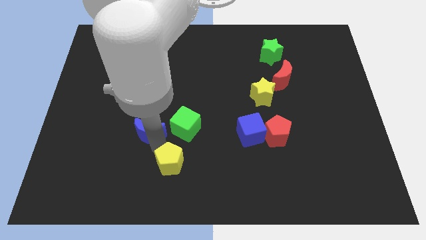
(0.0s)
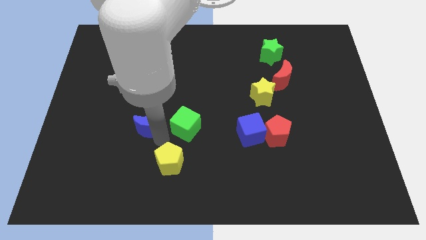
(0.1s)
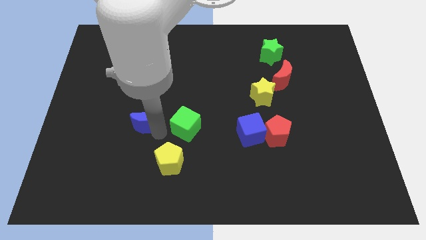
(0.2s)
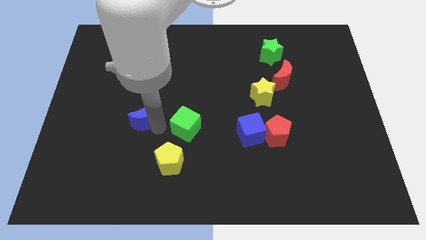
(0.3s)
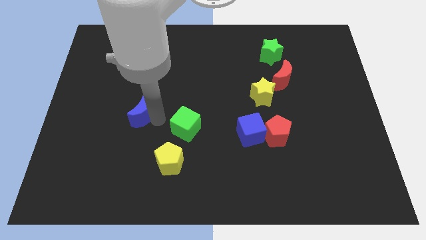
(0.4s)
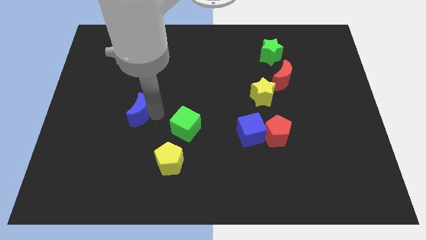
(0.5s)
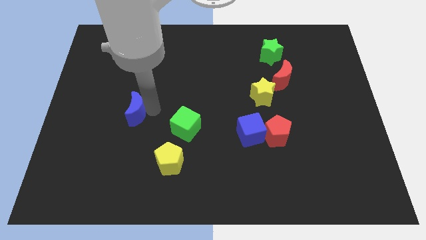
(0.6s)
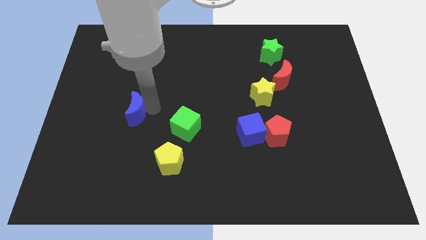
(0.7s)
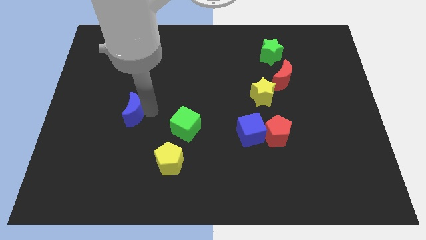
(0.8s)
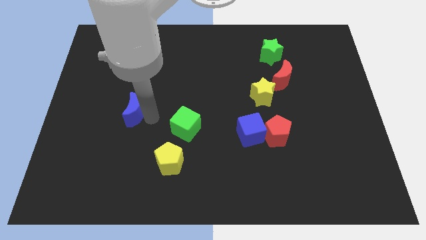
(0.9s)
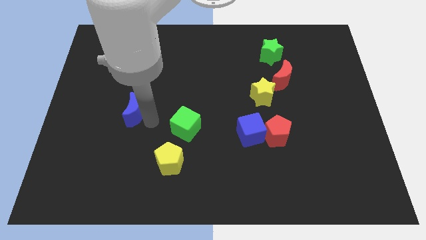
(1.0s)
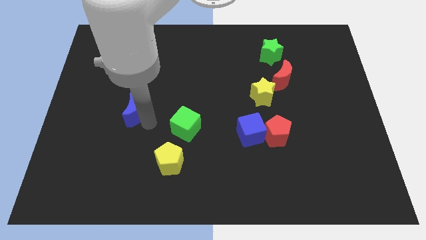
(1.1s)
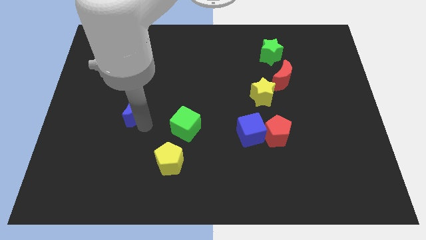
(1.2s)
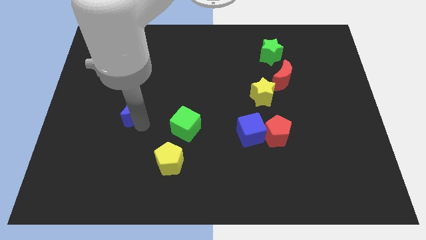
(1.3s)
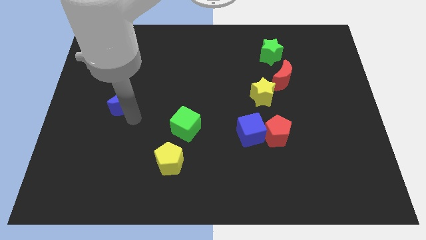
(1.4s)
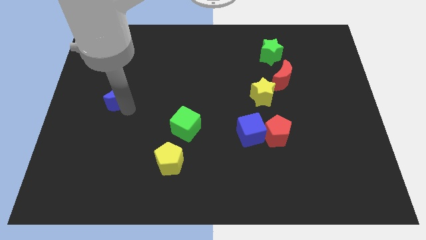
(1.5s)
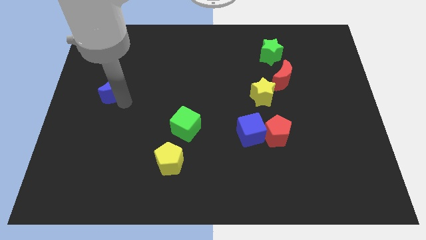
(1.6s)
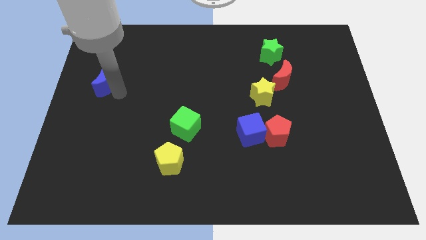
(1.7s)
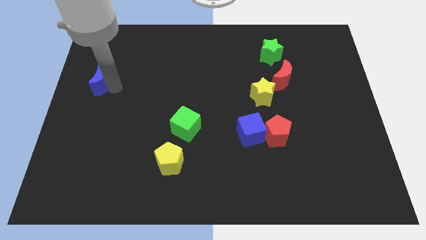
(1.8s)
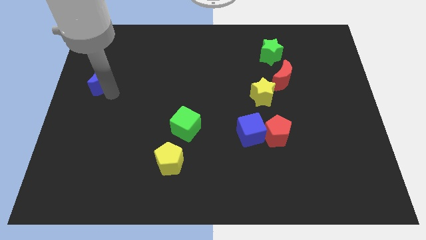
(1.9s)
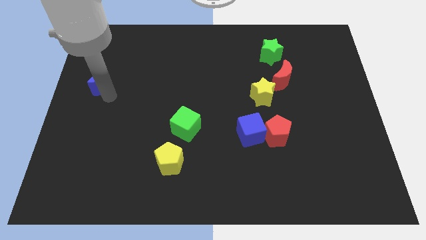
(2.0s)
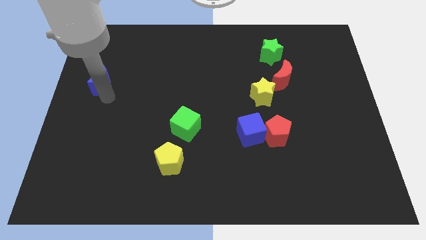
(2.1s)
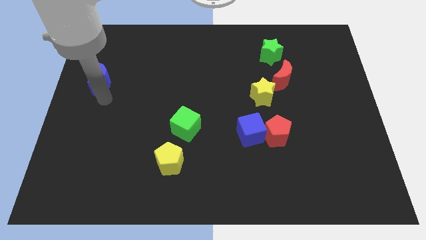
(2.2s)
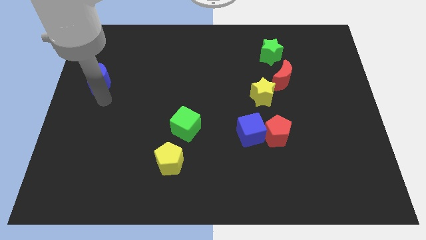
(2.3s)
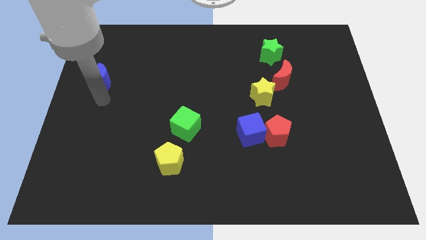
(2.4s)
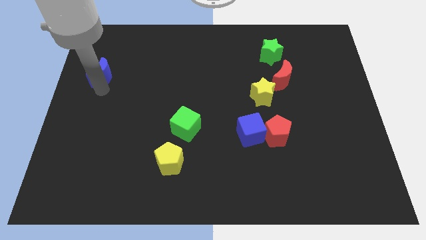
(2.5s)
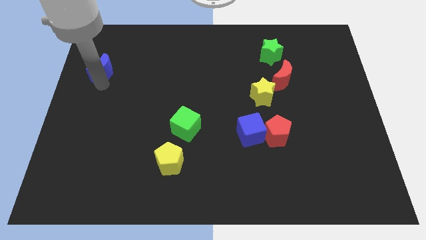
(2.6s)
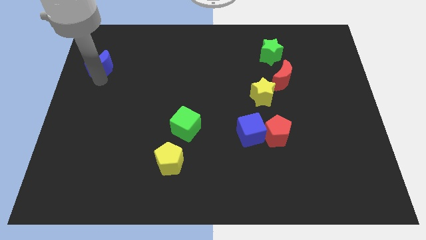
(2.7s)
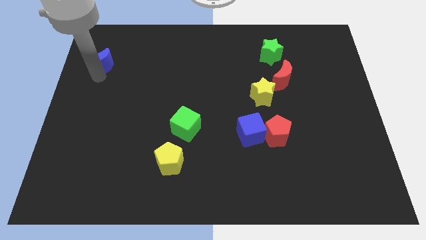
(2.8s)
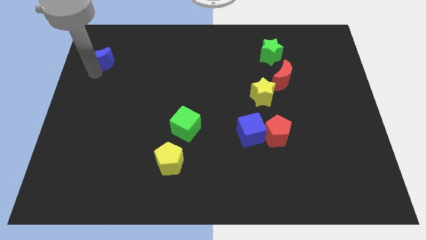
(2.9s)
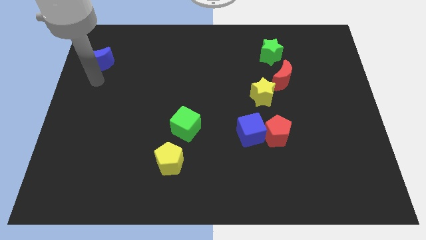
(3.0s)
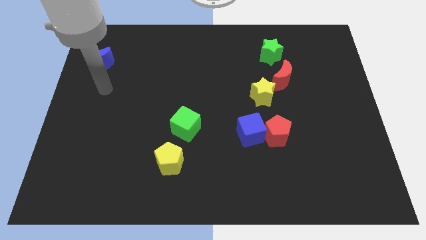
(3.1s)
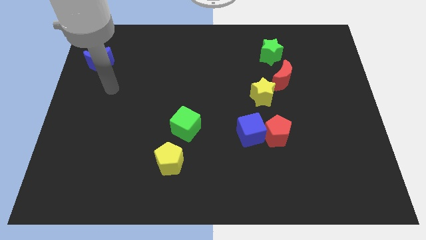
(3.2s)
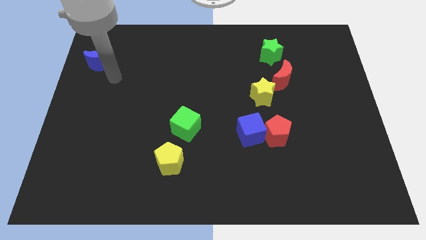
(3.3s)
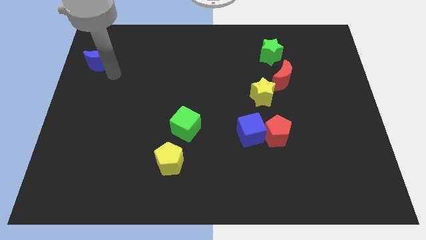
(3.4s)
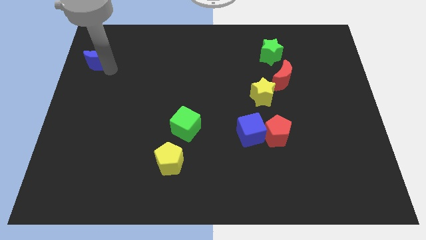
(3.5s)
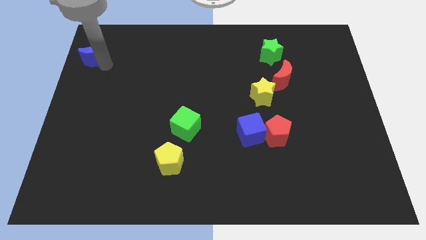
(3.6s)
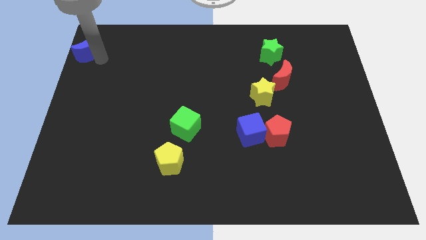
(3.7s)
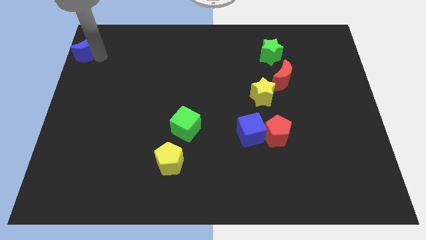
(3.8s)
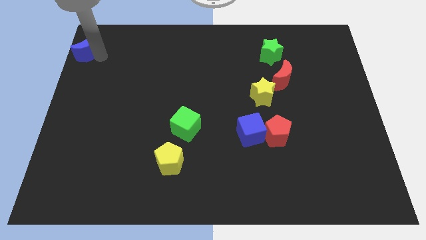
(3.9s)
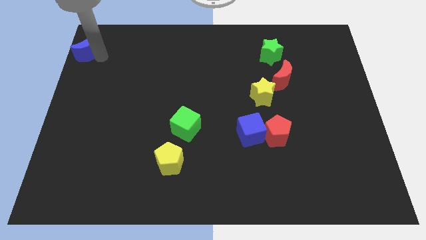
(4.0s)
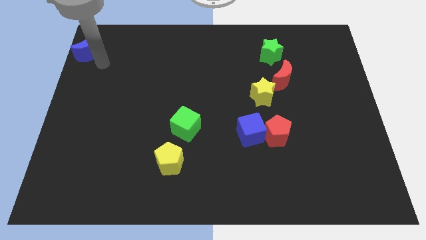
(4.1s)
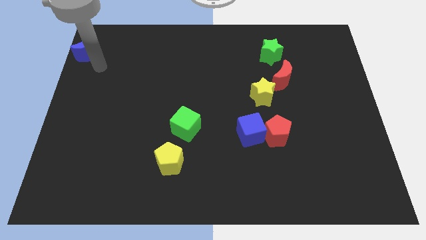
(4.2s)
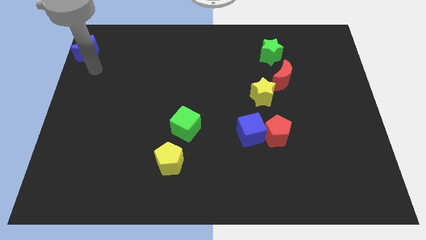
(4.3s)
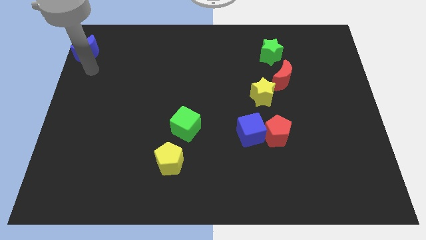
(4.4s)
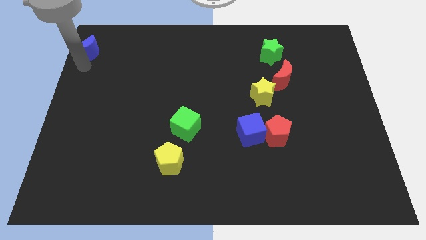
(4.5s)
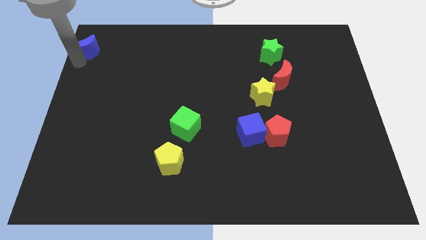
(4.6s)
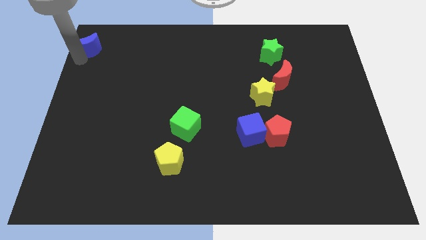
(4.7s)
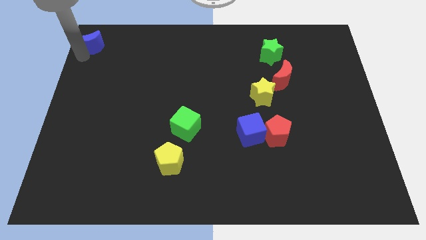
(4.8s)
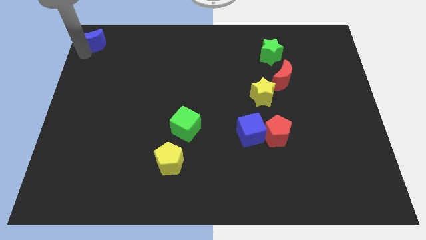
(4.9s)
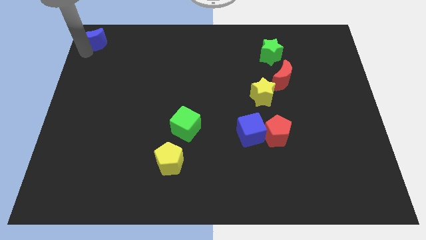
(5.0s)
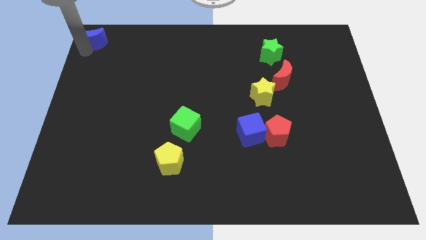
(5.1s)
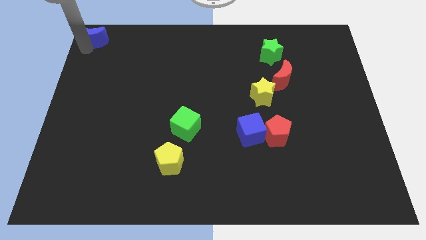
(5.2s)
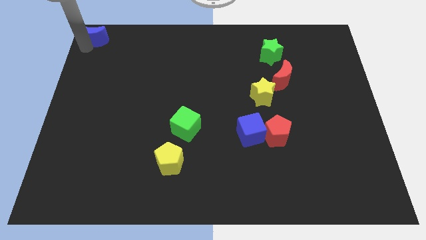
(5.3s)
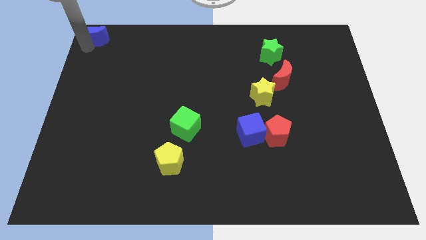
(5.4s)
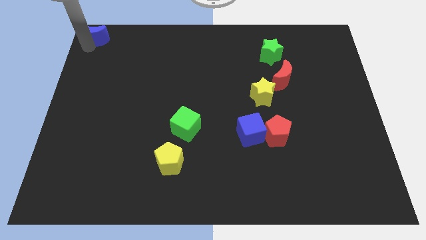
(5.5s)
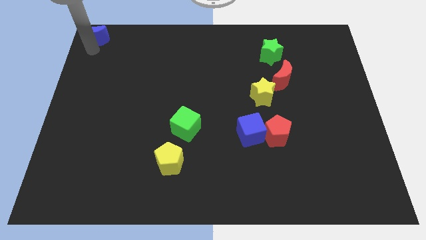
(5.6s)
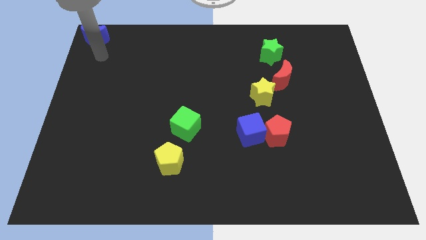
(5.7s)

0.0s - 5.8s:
push the blue crescent to the top left corner of the board

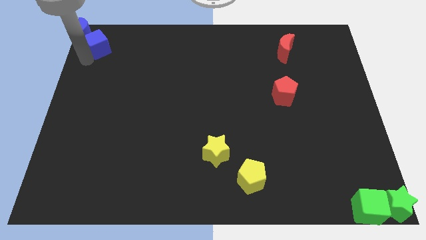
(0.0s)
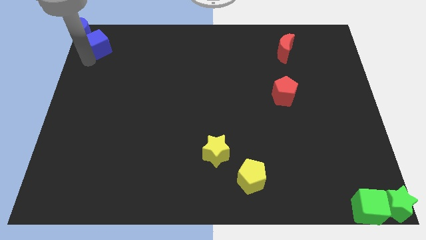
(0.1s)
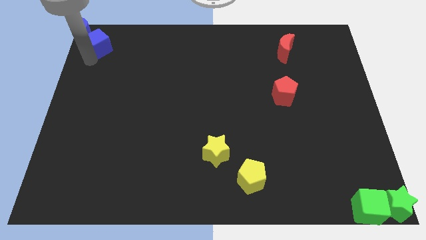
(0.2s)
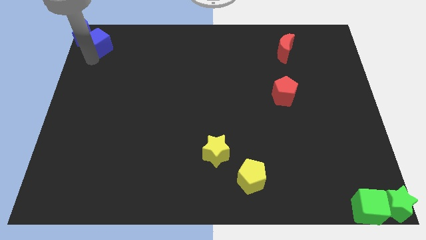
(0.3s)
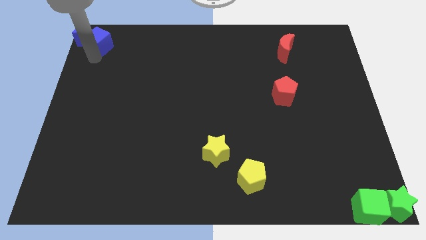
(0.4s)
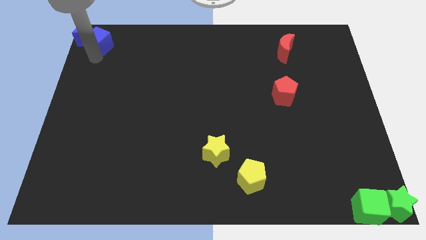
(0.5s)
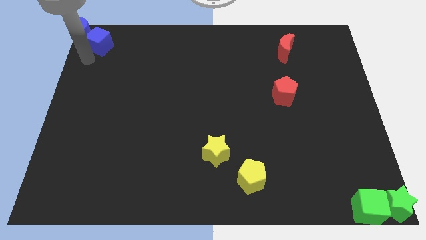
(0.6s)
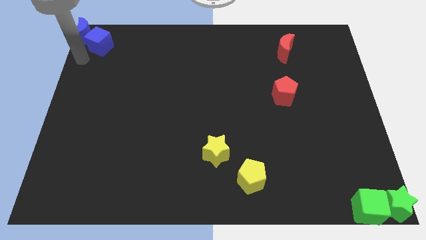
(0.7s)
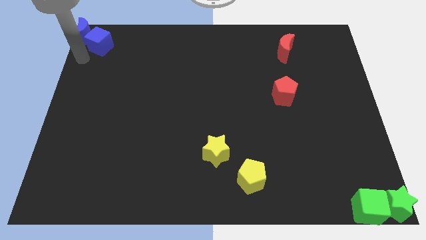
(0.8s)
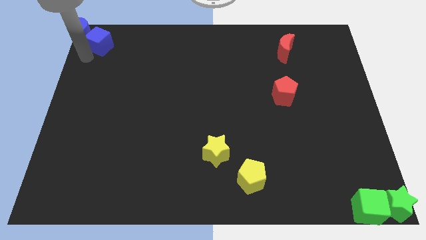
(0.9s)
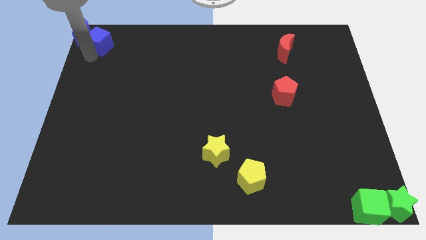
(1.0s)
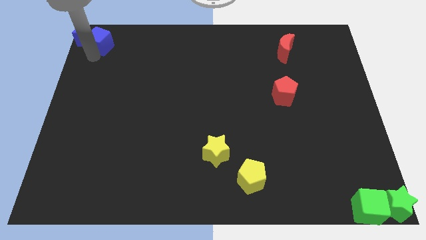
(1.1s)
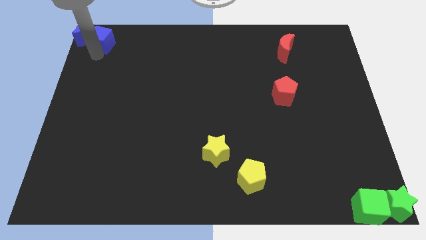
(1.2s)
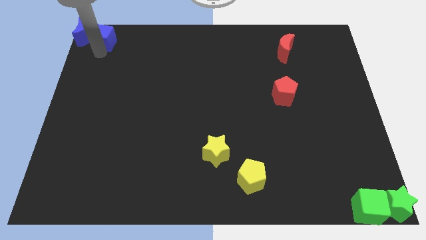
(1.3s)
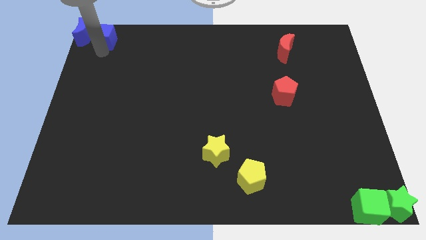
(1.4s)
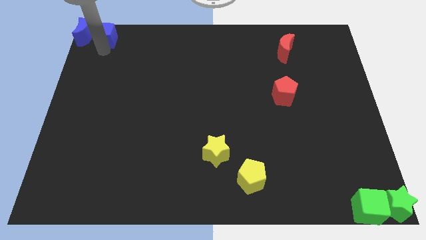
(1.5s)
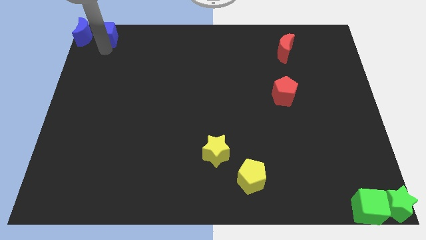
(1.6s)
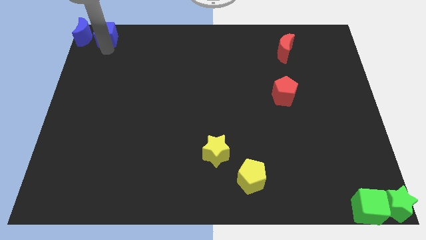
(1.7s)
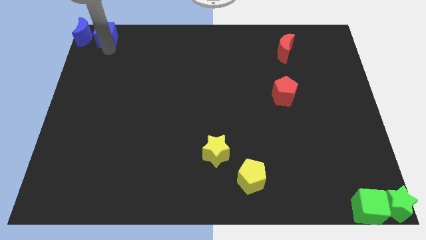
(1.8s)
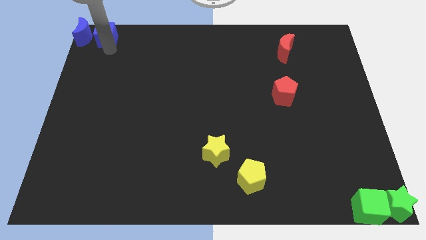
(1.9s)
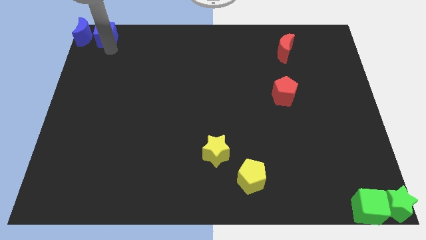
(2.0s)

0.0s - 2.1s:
place blue cube to the right of blue moon

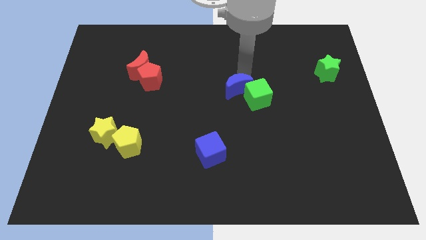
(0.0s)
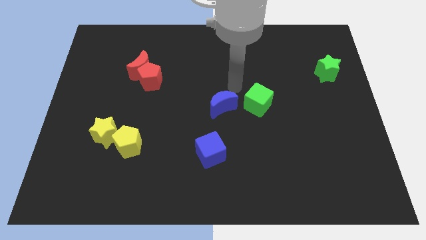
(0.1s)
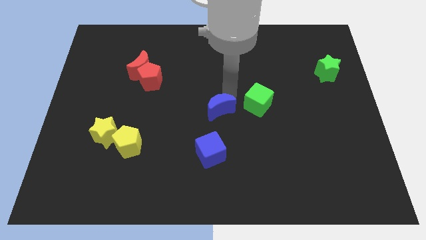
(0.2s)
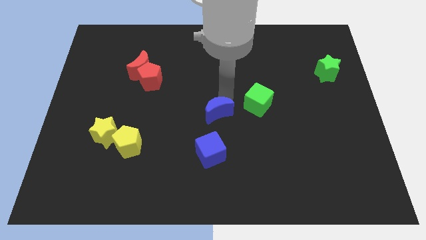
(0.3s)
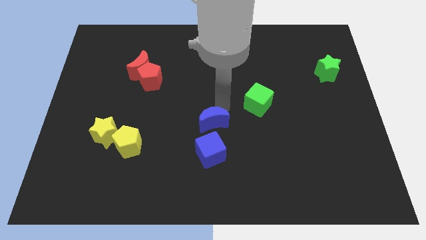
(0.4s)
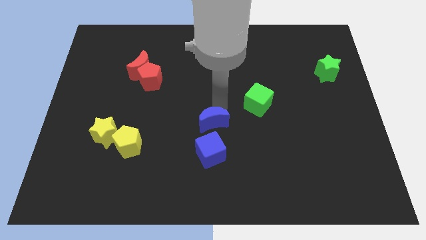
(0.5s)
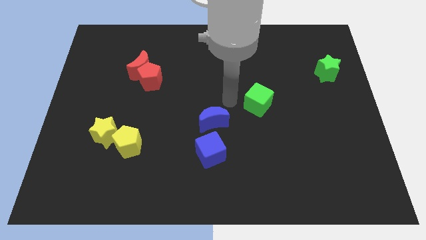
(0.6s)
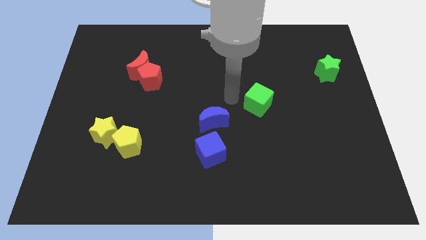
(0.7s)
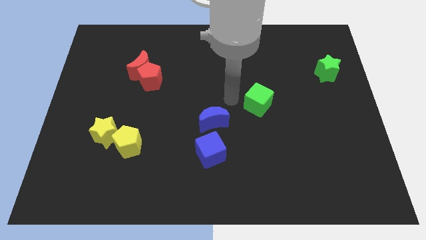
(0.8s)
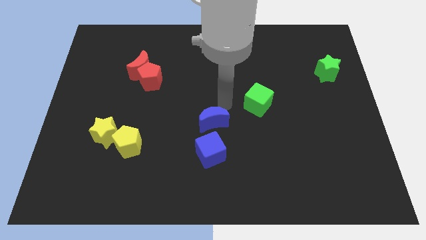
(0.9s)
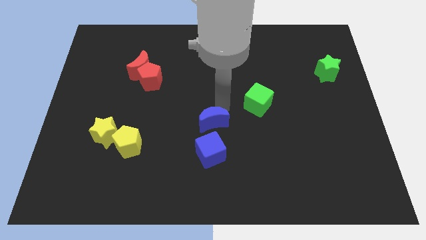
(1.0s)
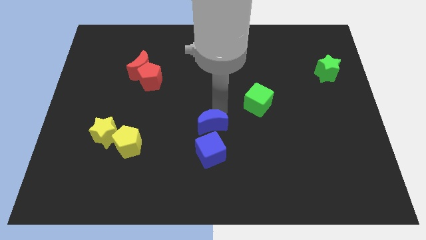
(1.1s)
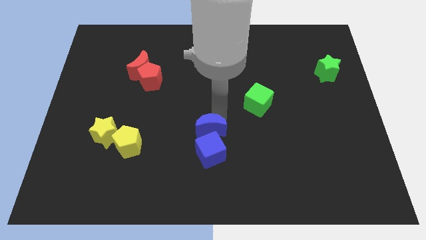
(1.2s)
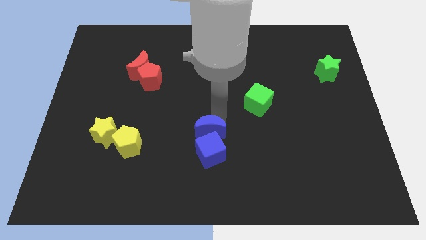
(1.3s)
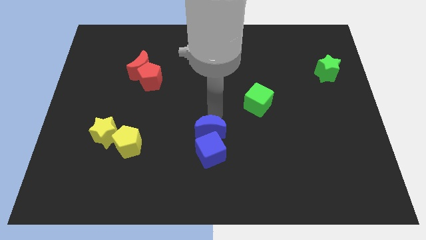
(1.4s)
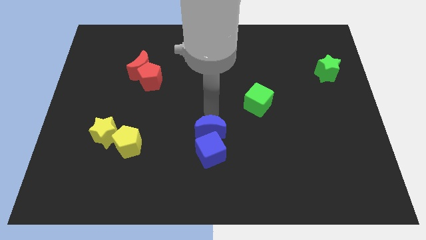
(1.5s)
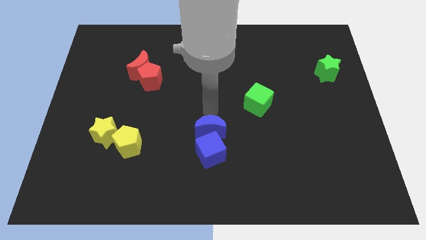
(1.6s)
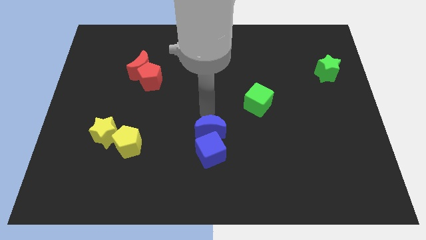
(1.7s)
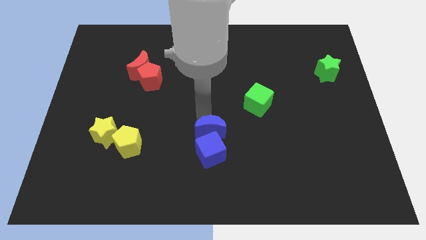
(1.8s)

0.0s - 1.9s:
place the blue moon into the blue cube
